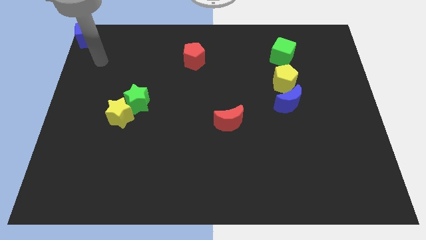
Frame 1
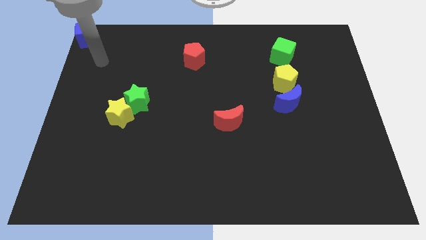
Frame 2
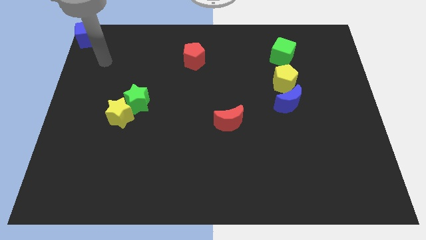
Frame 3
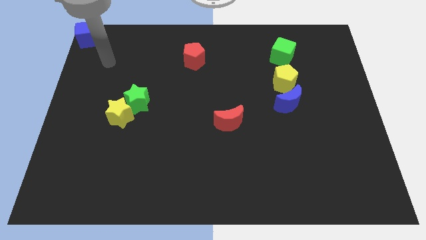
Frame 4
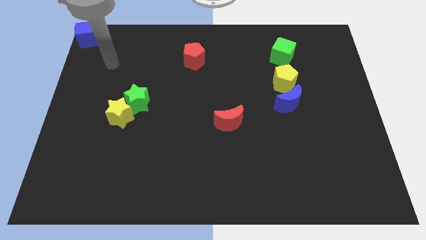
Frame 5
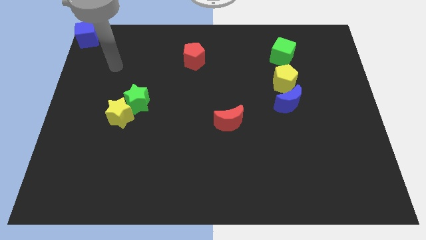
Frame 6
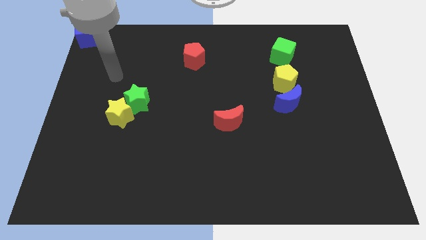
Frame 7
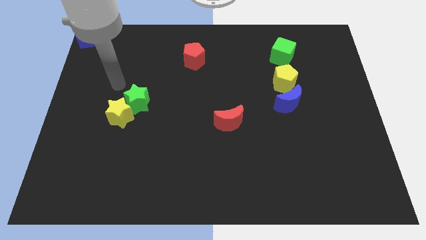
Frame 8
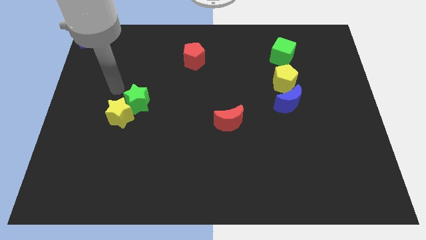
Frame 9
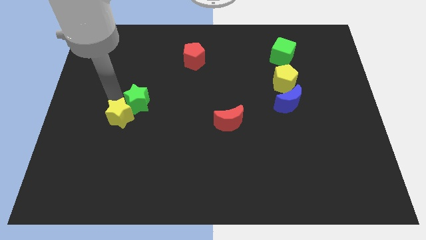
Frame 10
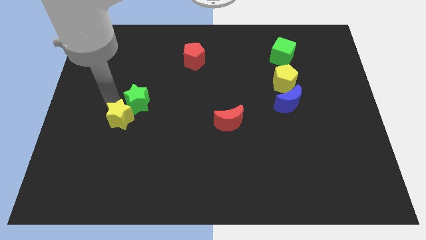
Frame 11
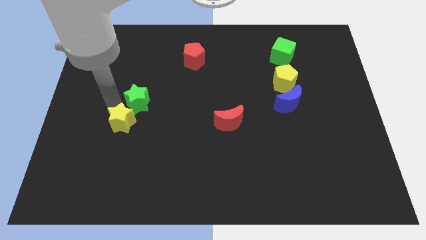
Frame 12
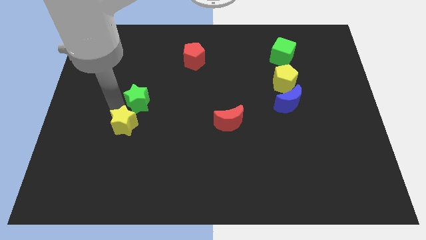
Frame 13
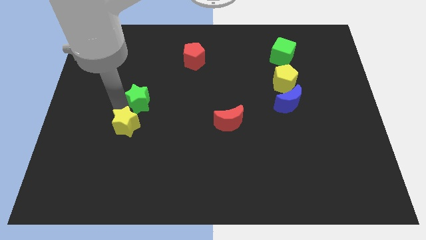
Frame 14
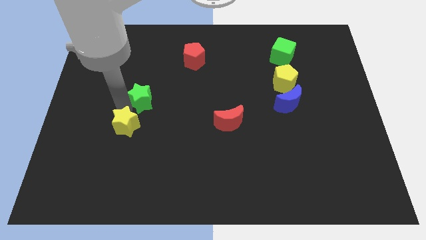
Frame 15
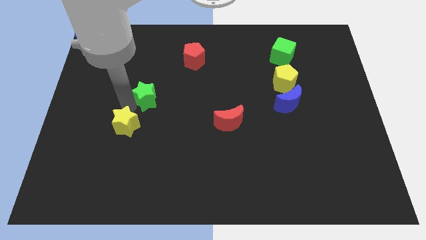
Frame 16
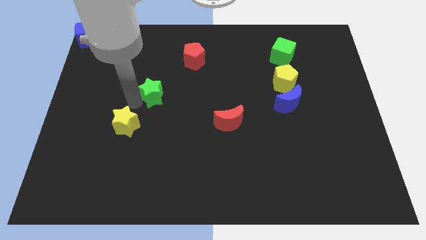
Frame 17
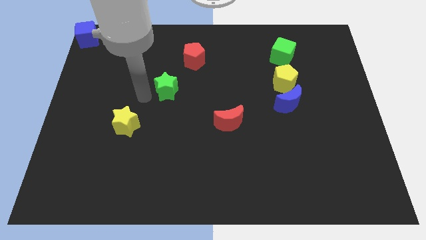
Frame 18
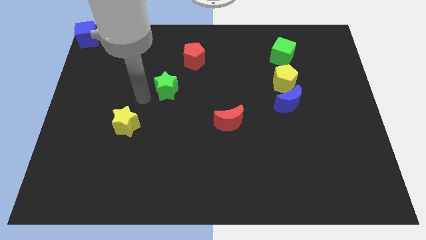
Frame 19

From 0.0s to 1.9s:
move the yellow star and green star diagonally on the bottom left side of the red pentagon

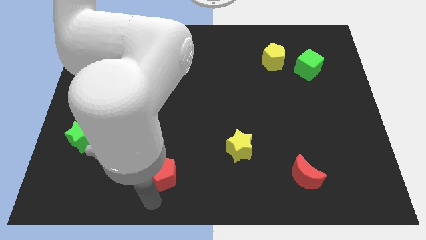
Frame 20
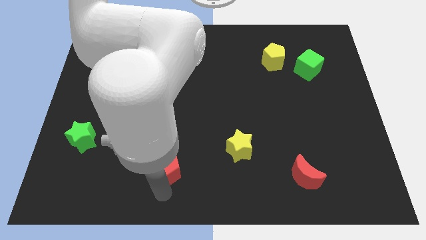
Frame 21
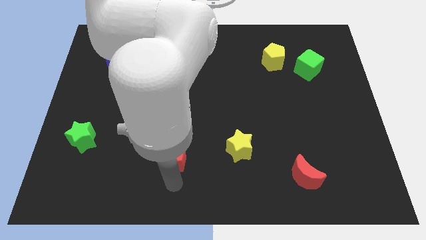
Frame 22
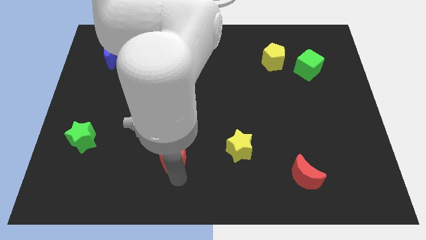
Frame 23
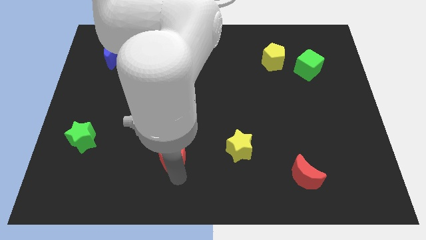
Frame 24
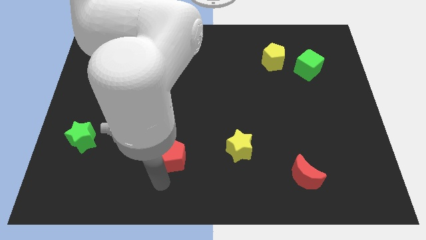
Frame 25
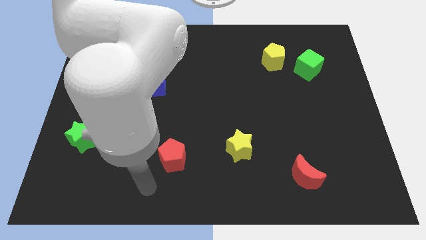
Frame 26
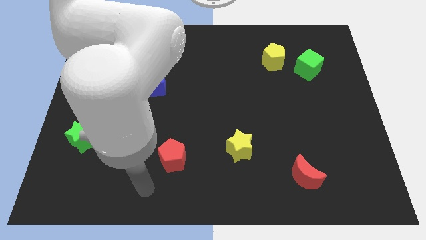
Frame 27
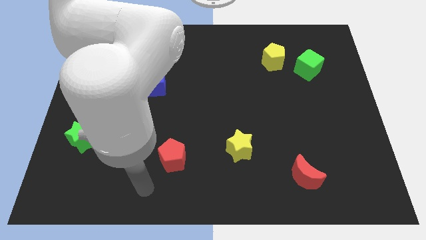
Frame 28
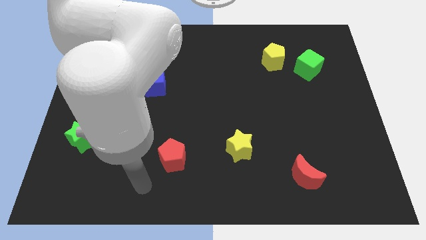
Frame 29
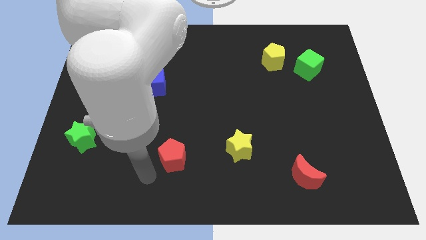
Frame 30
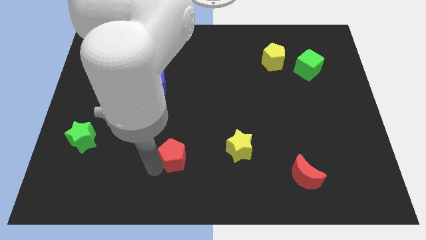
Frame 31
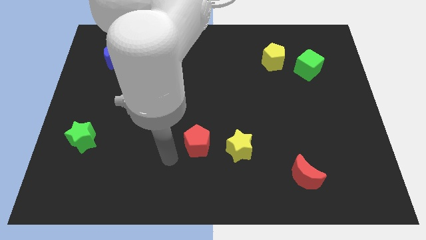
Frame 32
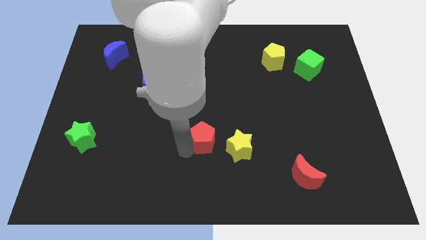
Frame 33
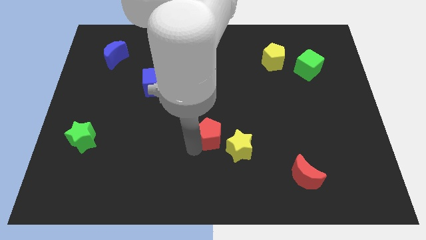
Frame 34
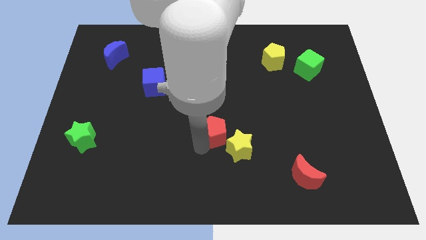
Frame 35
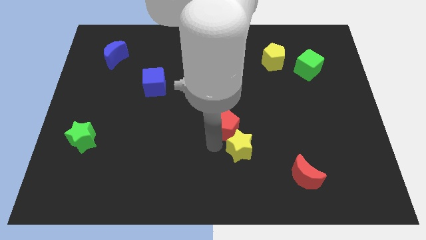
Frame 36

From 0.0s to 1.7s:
put the red pentagon at the top left side of yellow star

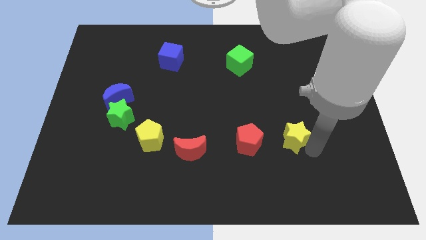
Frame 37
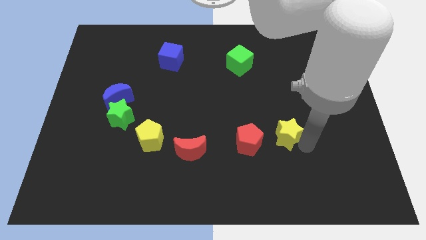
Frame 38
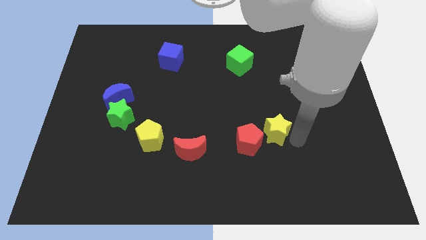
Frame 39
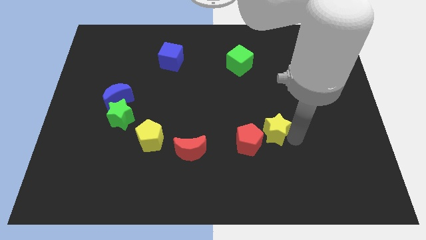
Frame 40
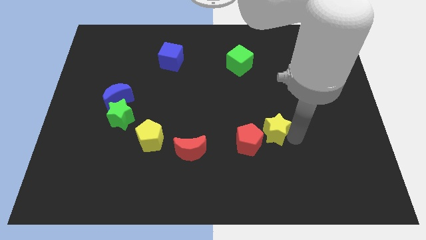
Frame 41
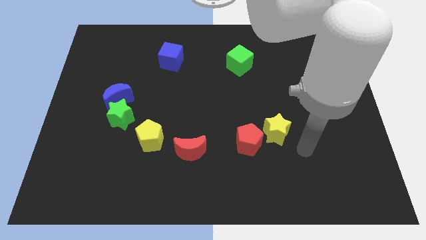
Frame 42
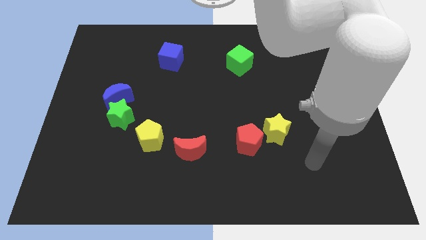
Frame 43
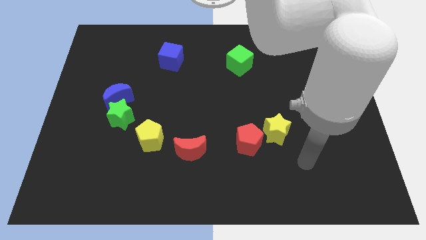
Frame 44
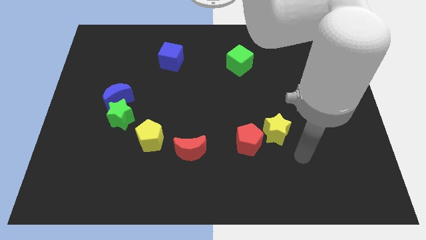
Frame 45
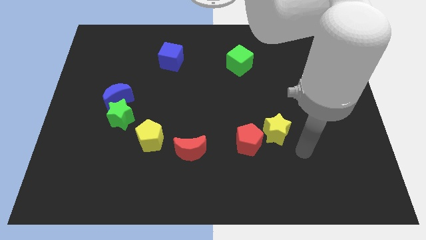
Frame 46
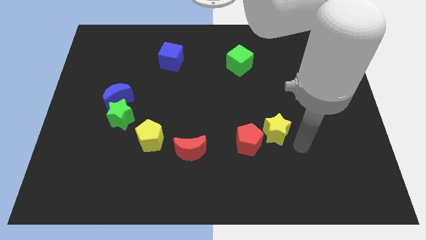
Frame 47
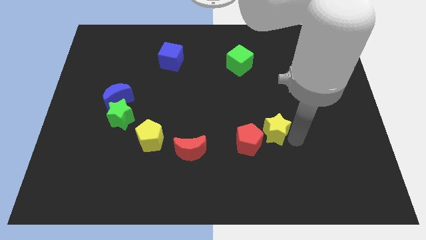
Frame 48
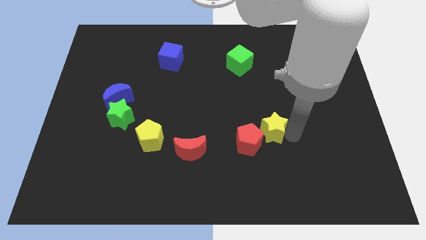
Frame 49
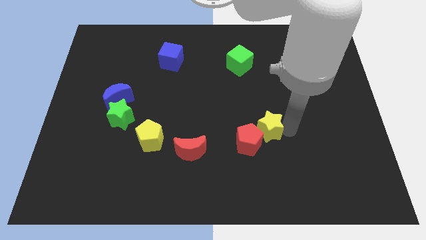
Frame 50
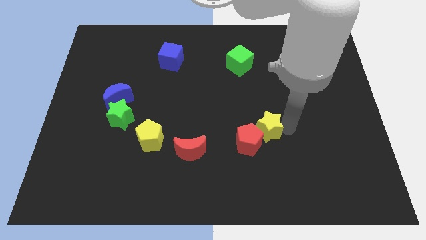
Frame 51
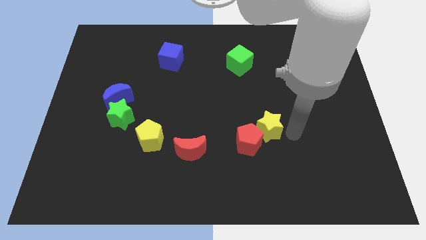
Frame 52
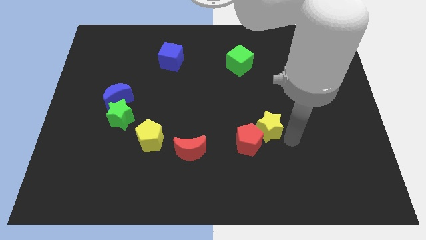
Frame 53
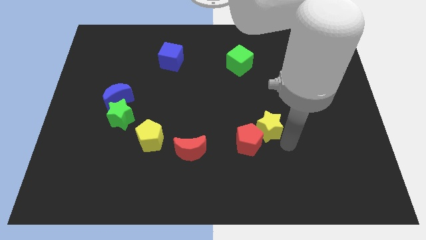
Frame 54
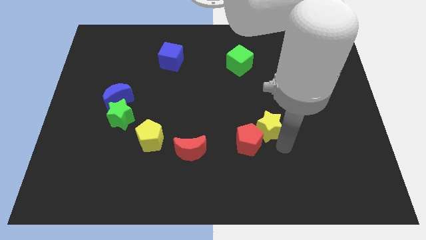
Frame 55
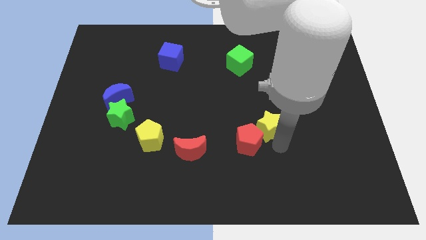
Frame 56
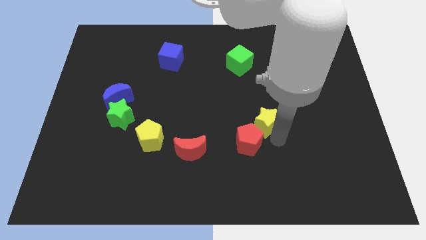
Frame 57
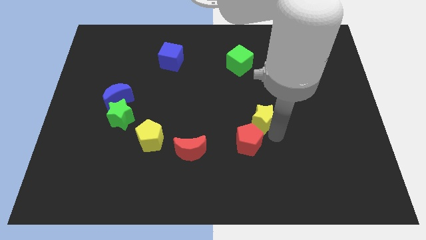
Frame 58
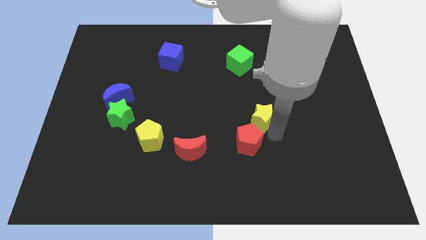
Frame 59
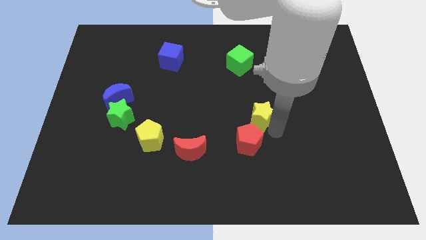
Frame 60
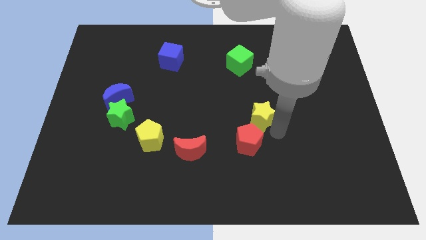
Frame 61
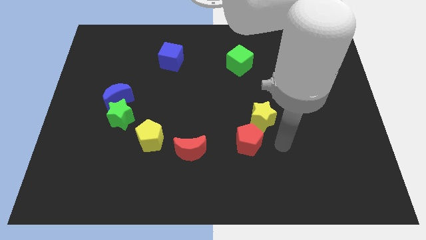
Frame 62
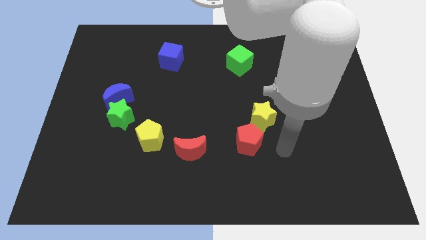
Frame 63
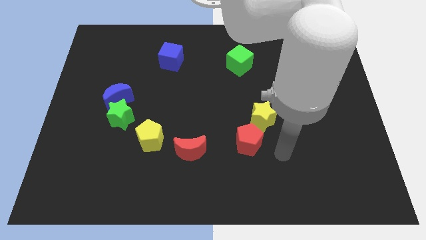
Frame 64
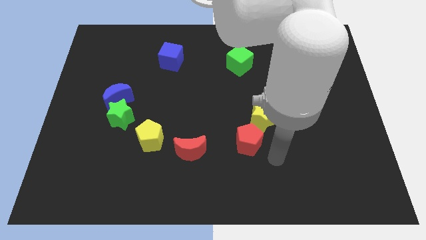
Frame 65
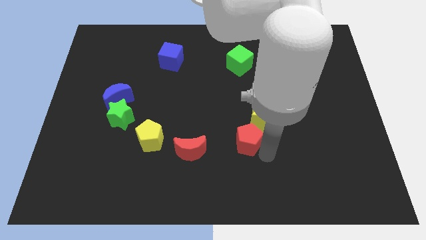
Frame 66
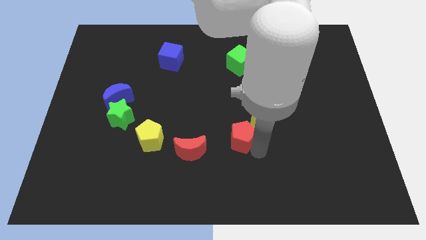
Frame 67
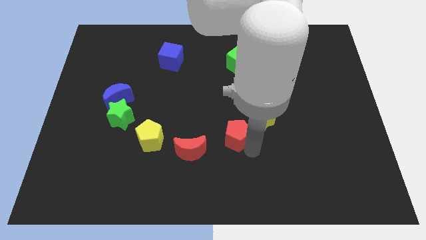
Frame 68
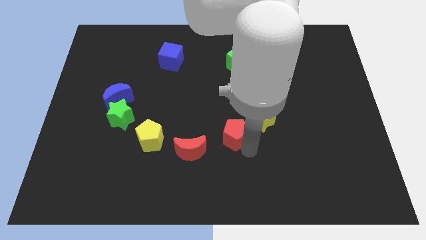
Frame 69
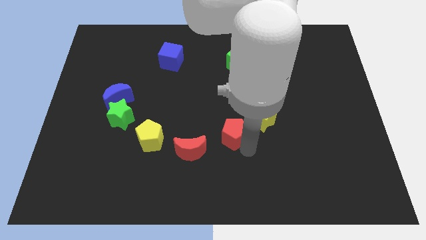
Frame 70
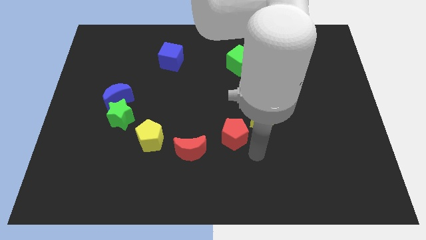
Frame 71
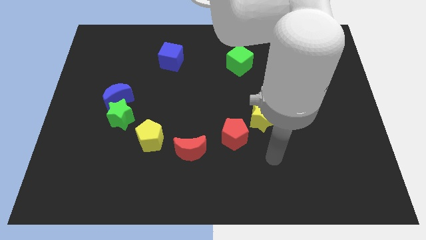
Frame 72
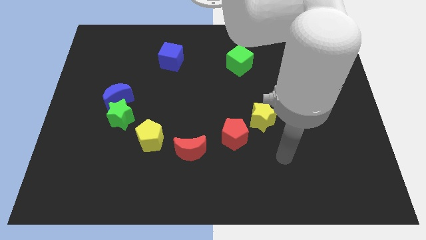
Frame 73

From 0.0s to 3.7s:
place yellow star and red pentagon diagonal to each other

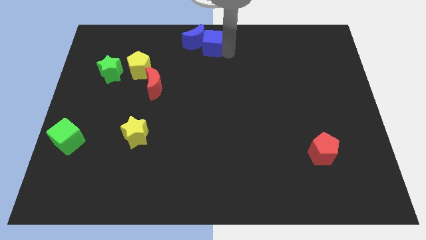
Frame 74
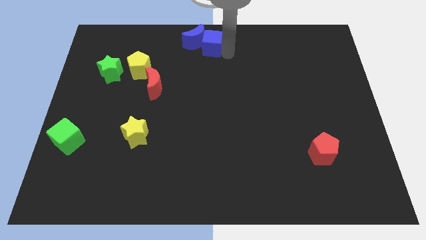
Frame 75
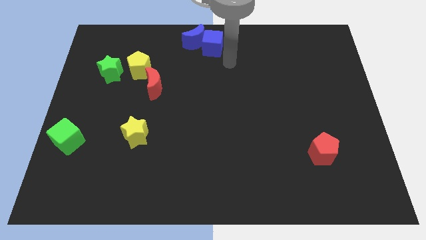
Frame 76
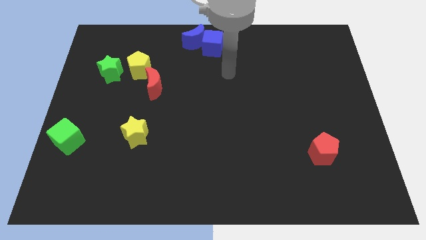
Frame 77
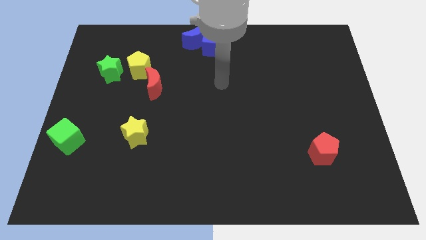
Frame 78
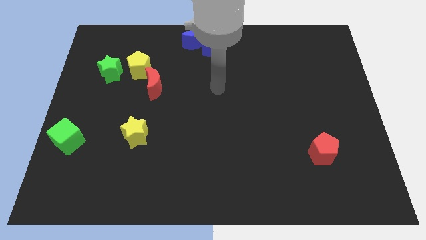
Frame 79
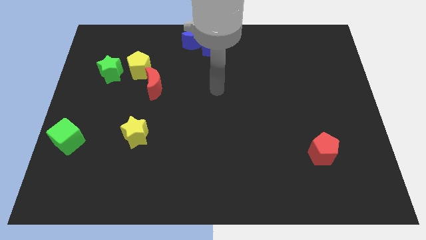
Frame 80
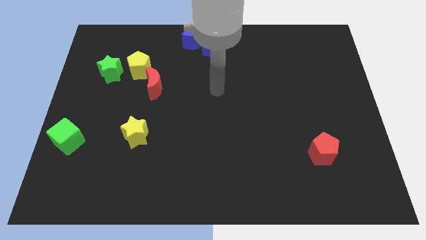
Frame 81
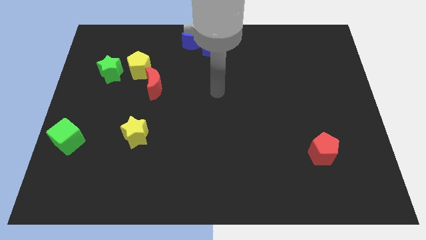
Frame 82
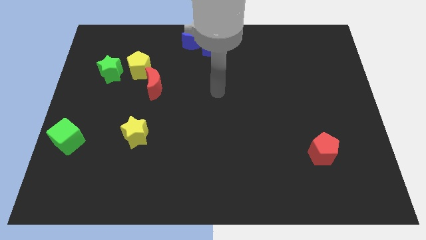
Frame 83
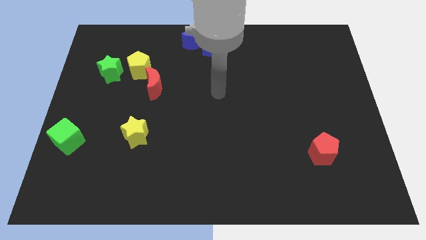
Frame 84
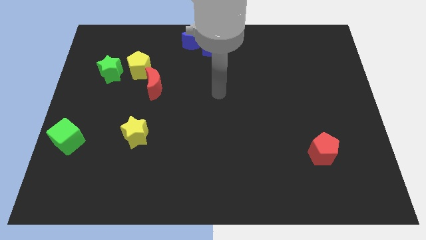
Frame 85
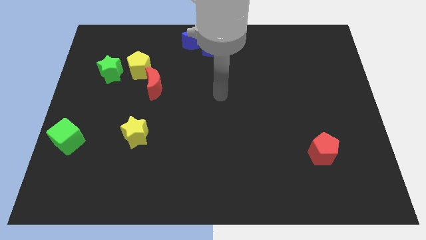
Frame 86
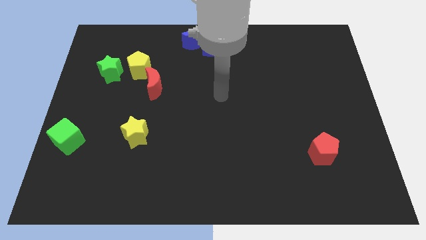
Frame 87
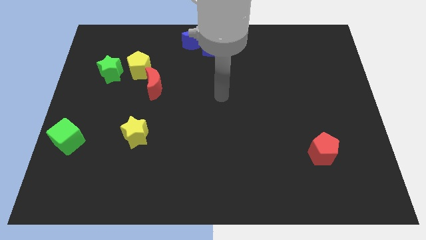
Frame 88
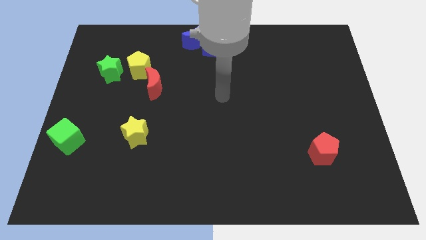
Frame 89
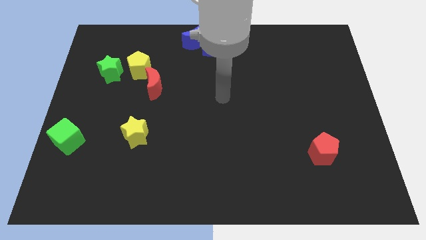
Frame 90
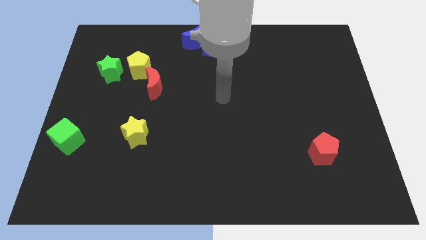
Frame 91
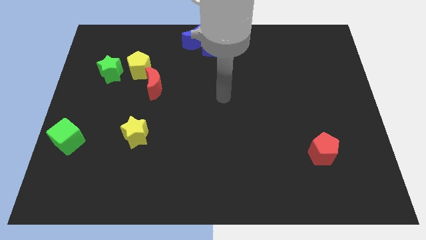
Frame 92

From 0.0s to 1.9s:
slide your hand away from the blue cube
